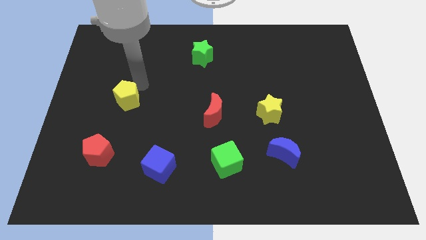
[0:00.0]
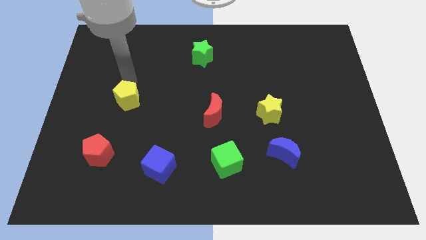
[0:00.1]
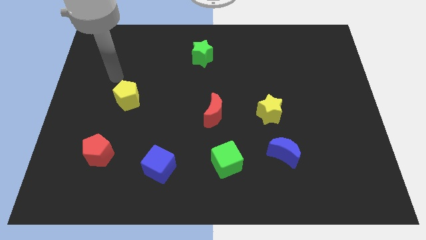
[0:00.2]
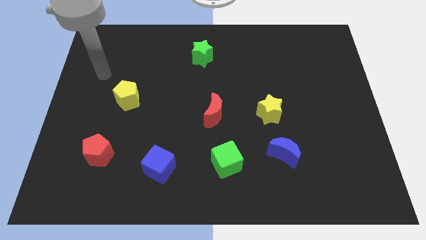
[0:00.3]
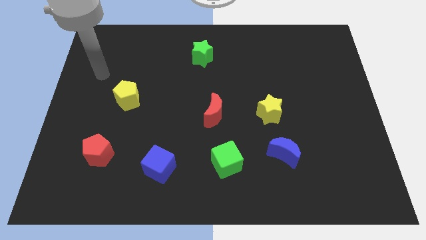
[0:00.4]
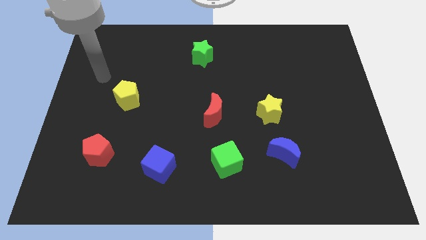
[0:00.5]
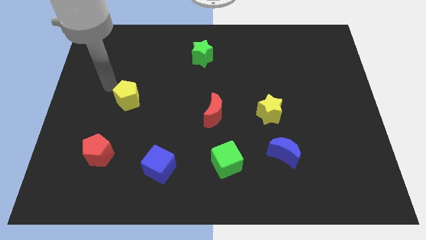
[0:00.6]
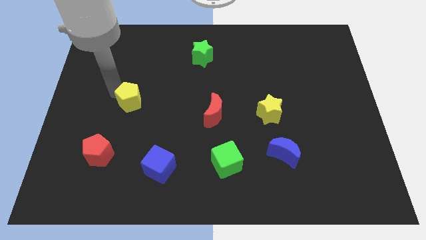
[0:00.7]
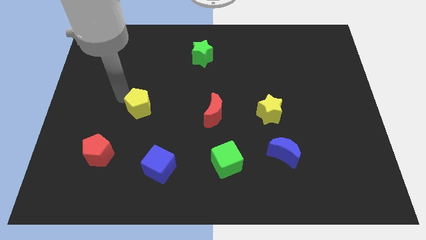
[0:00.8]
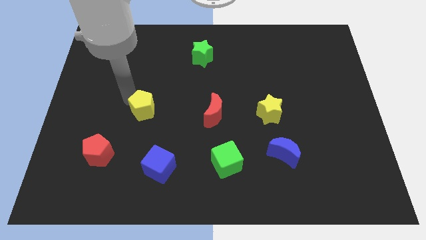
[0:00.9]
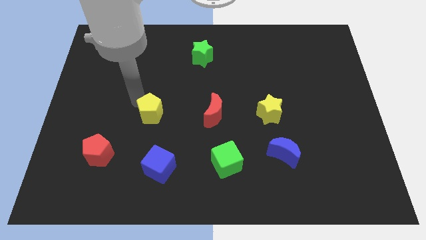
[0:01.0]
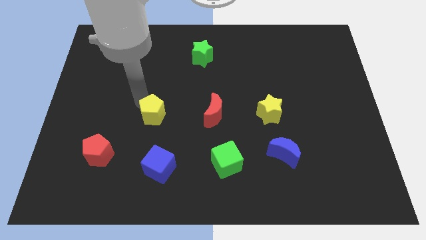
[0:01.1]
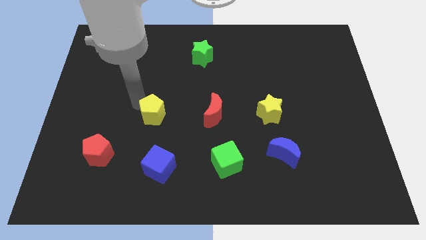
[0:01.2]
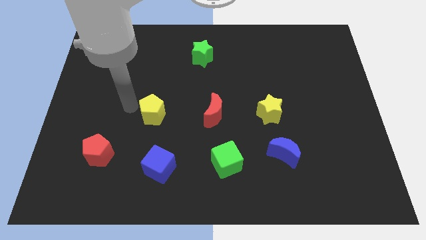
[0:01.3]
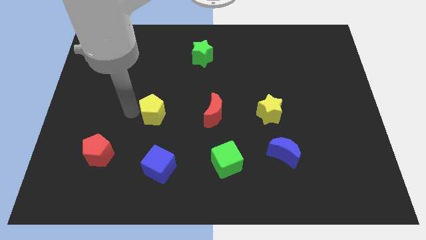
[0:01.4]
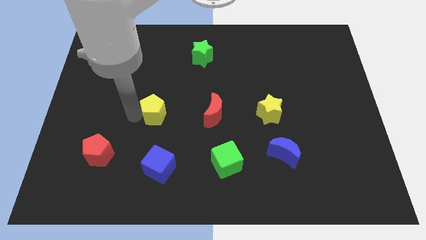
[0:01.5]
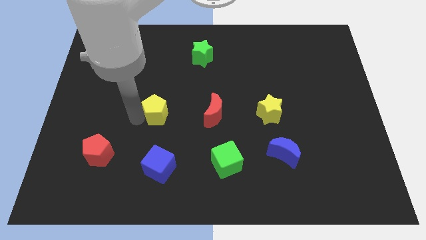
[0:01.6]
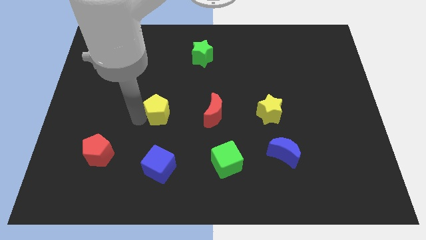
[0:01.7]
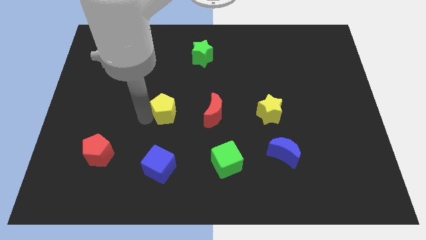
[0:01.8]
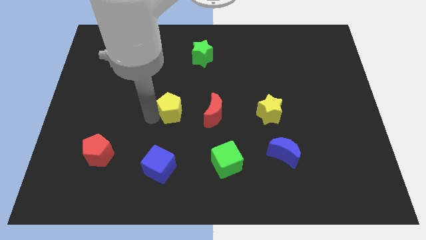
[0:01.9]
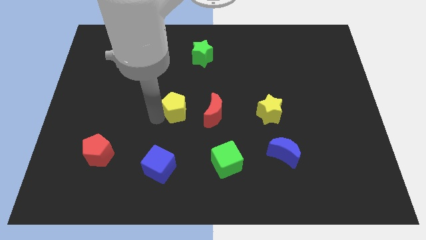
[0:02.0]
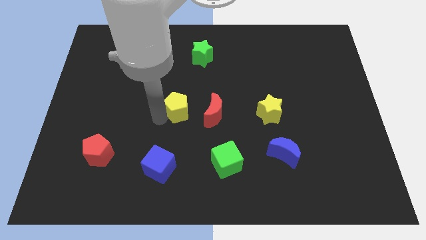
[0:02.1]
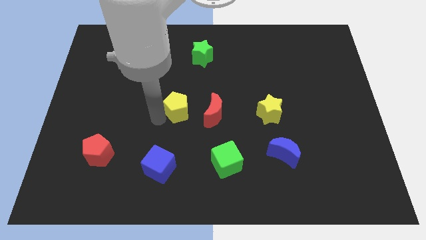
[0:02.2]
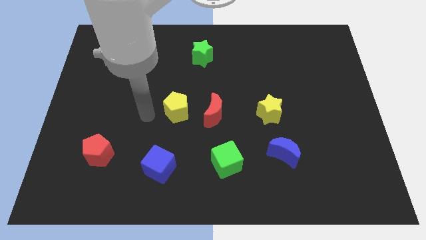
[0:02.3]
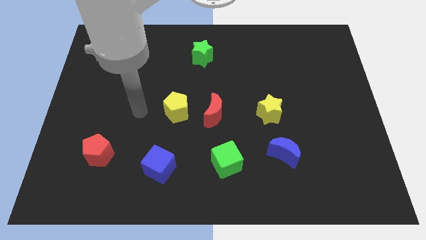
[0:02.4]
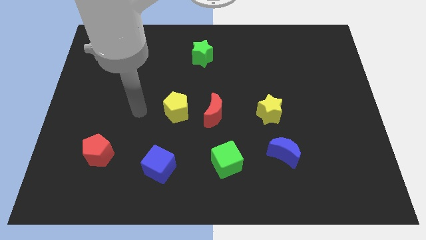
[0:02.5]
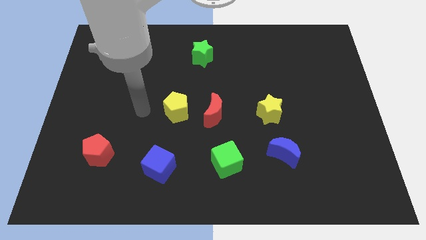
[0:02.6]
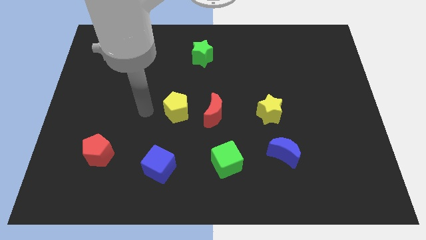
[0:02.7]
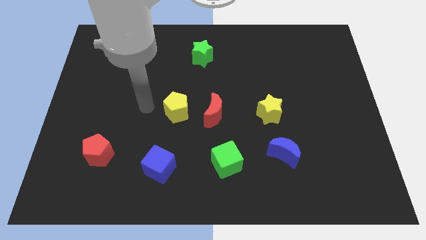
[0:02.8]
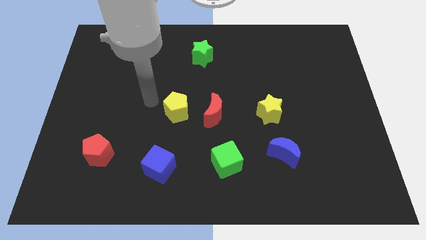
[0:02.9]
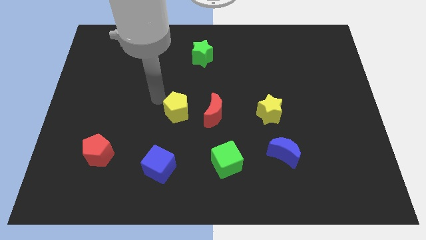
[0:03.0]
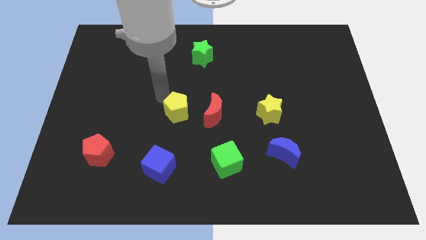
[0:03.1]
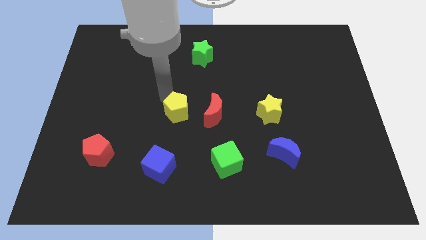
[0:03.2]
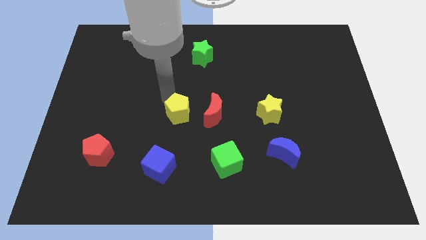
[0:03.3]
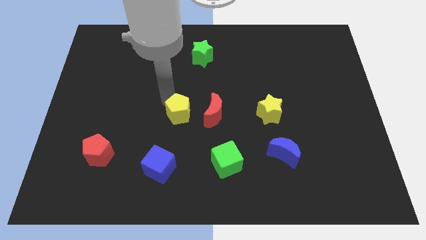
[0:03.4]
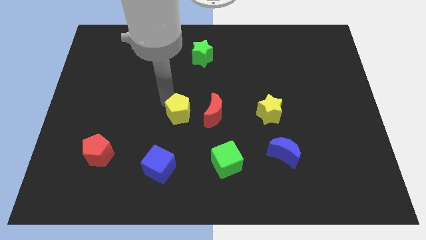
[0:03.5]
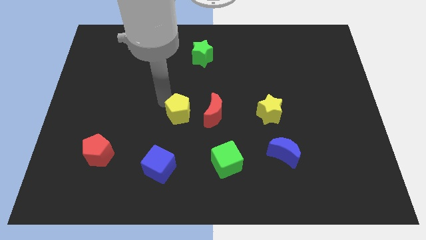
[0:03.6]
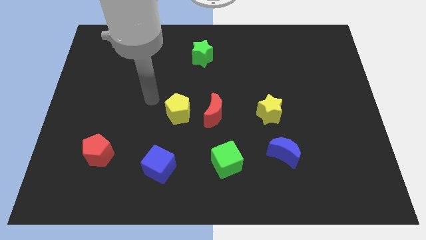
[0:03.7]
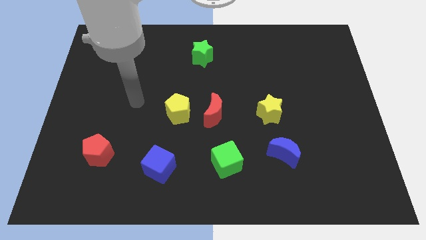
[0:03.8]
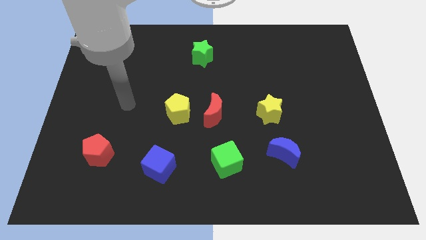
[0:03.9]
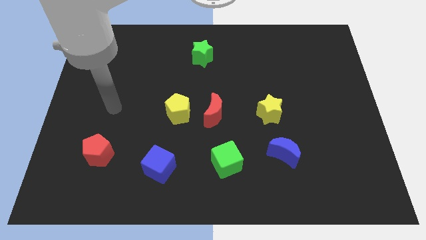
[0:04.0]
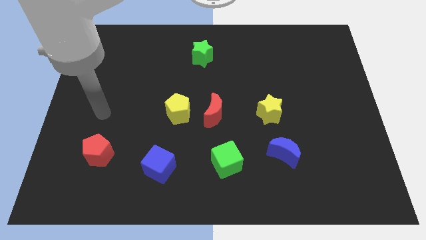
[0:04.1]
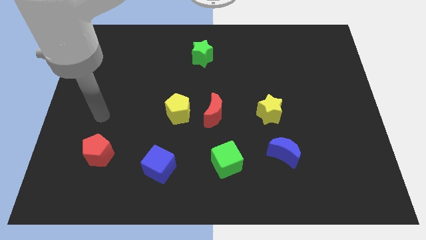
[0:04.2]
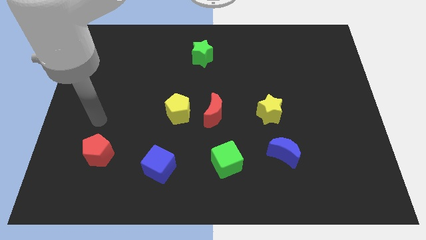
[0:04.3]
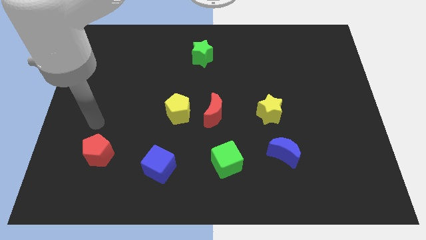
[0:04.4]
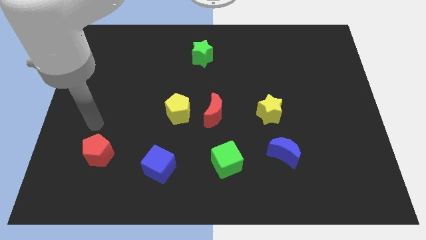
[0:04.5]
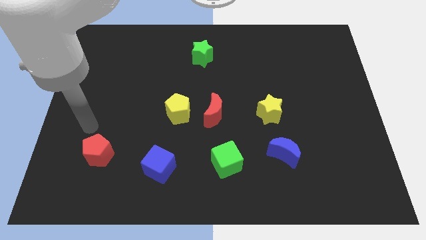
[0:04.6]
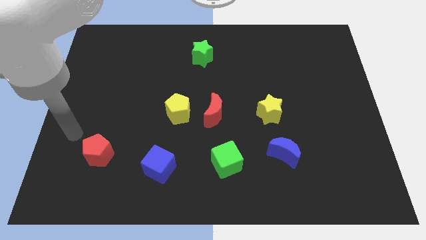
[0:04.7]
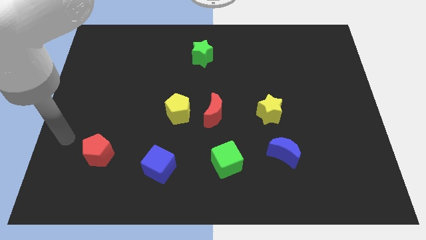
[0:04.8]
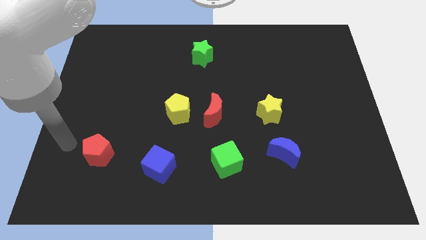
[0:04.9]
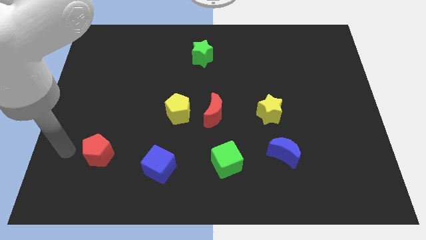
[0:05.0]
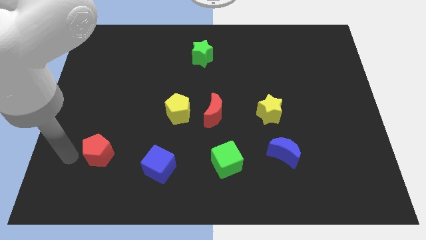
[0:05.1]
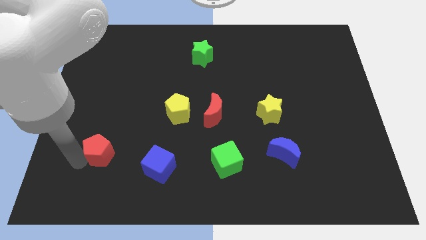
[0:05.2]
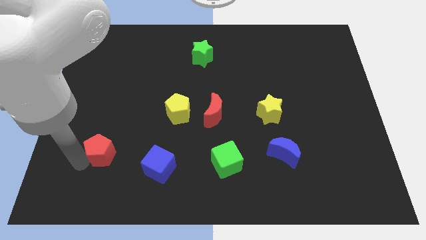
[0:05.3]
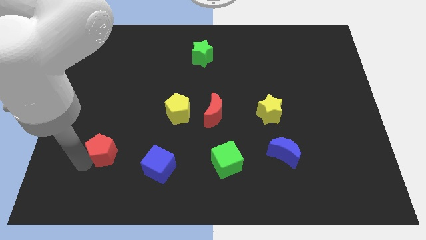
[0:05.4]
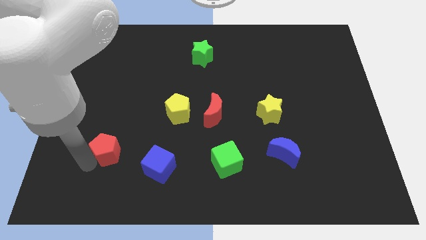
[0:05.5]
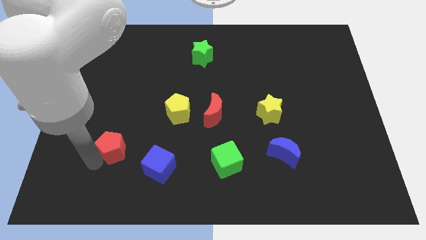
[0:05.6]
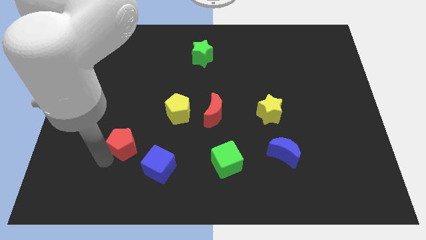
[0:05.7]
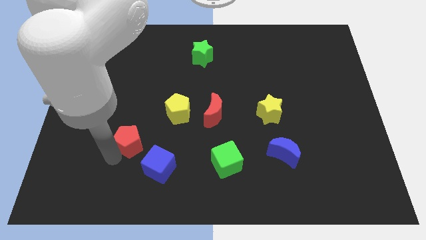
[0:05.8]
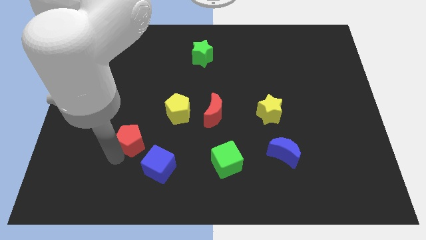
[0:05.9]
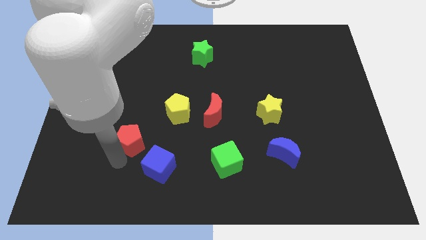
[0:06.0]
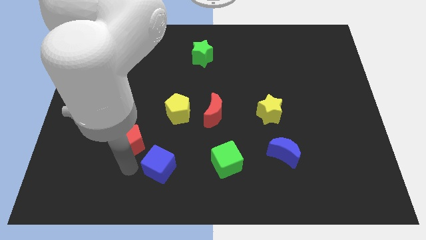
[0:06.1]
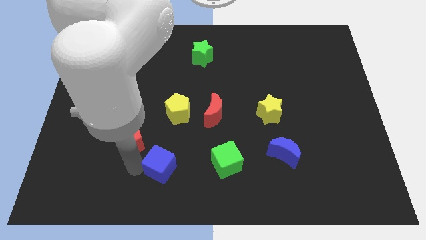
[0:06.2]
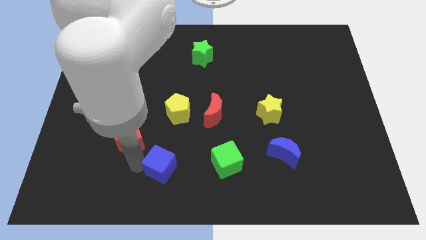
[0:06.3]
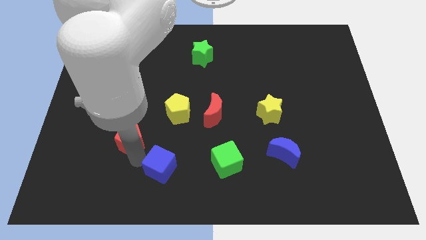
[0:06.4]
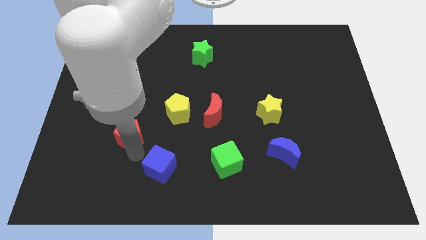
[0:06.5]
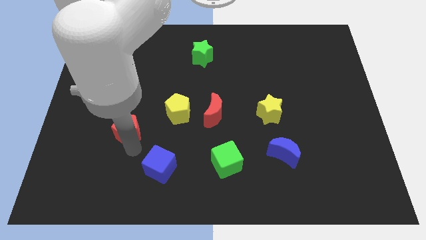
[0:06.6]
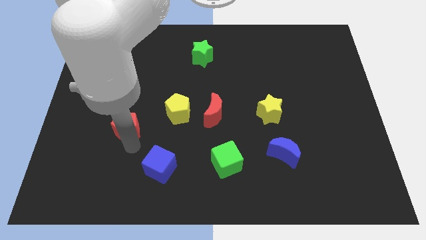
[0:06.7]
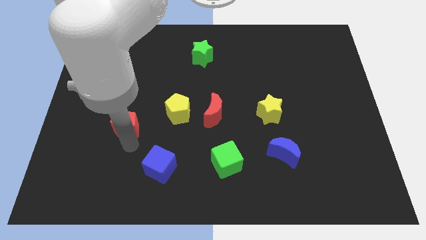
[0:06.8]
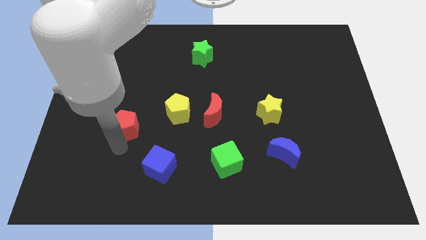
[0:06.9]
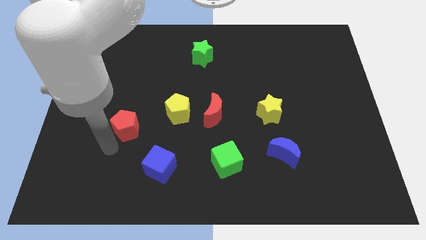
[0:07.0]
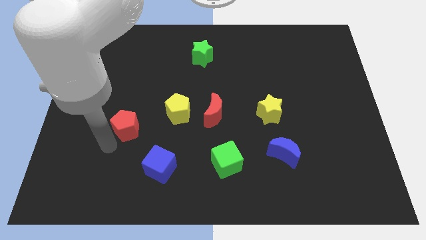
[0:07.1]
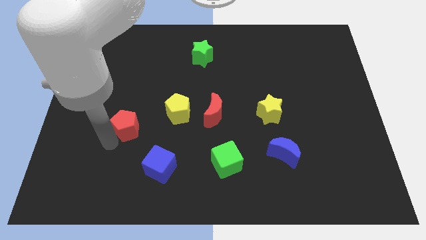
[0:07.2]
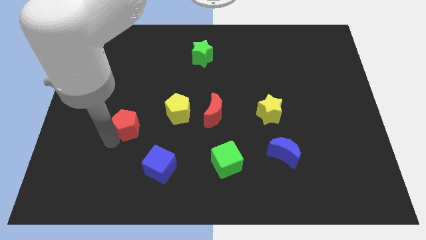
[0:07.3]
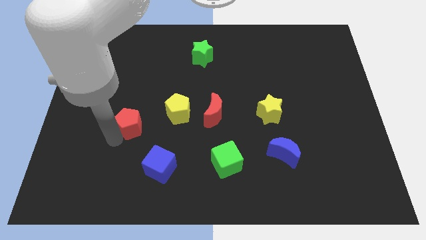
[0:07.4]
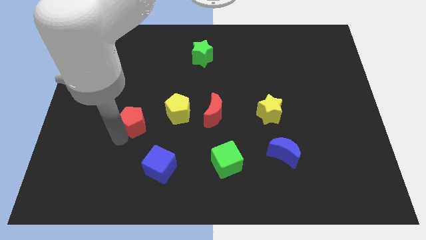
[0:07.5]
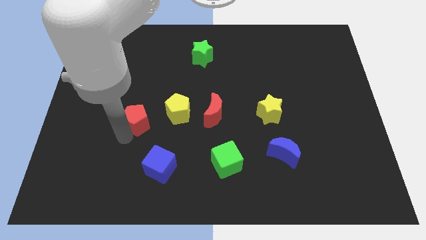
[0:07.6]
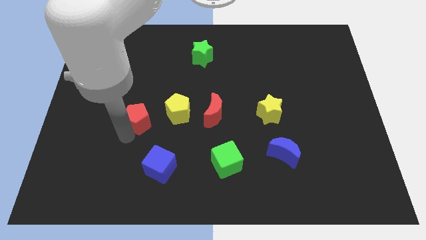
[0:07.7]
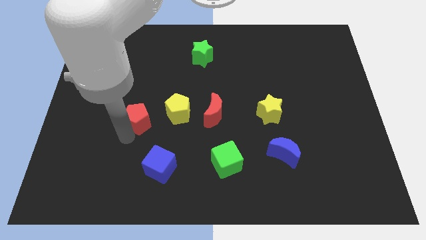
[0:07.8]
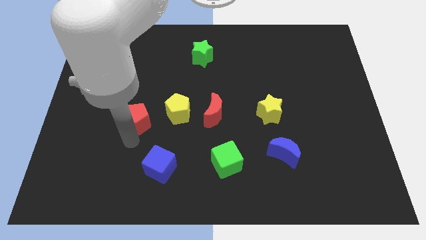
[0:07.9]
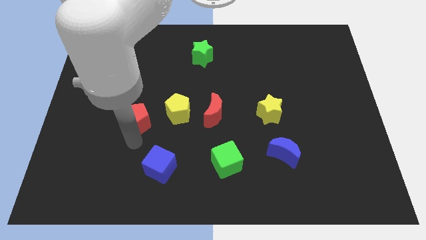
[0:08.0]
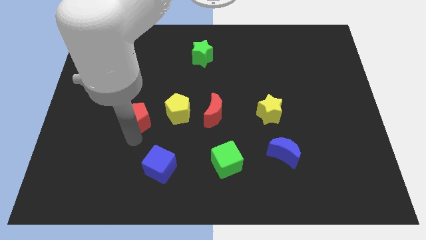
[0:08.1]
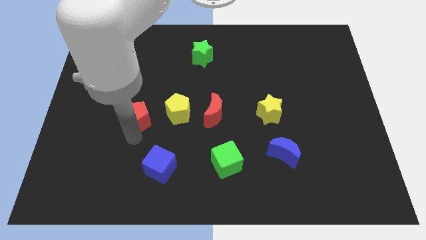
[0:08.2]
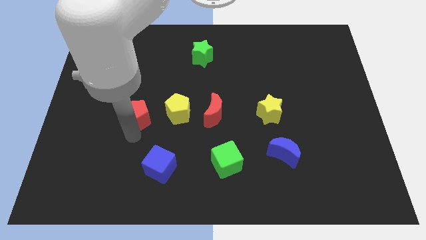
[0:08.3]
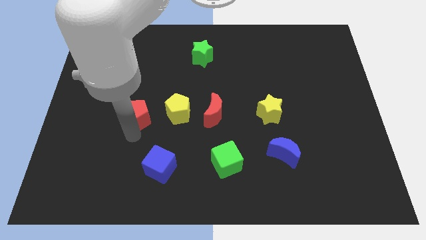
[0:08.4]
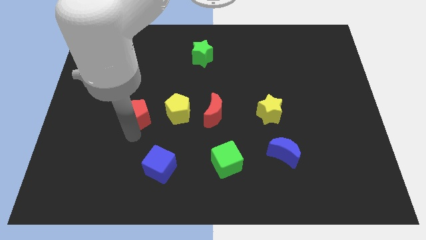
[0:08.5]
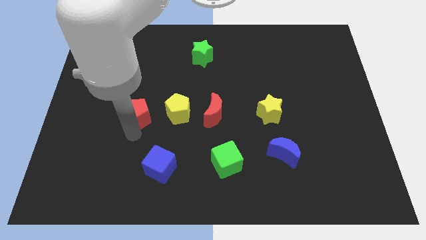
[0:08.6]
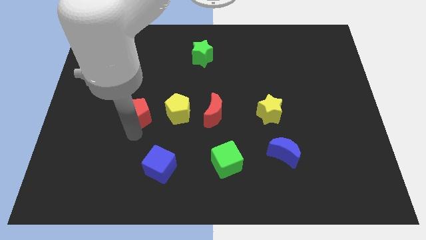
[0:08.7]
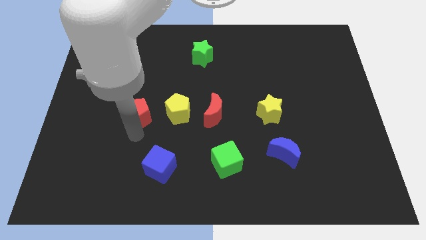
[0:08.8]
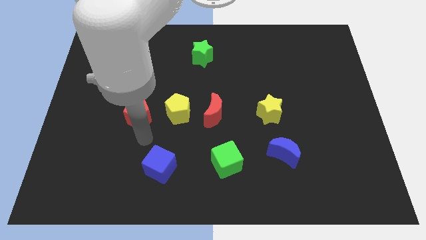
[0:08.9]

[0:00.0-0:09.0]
make a horizontal line with the yellow pentagon red pentagon red moon and yellow star at the center of the table
